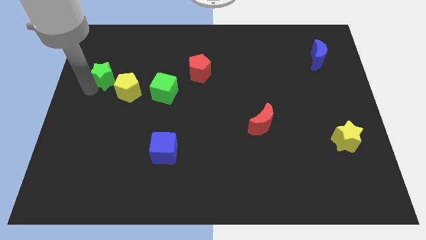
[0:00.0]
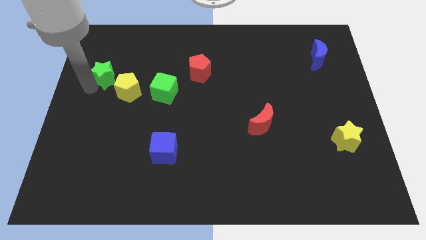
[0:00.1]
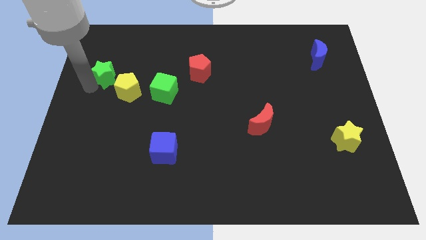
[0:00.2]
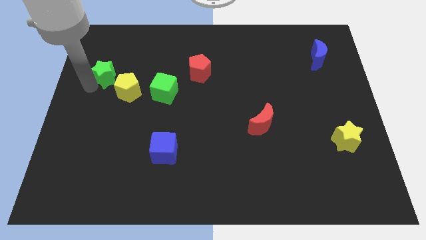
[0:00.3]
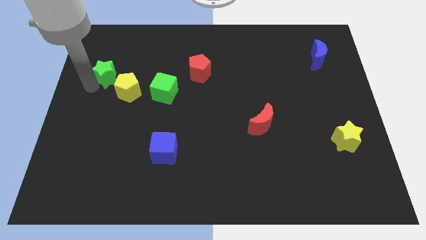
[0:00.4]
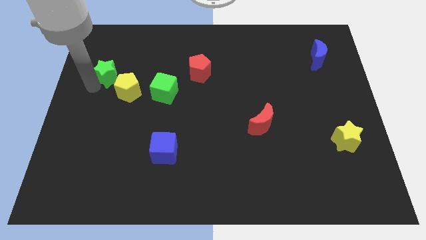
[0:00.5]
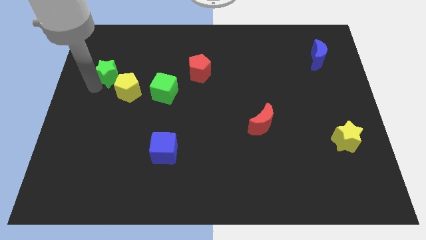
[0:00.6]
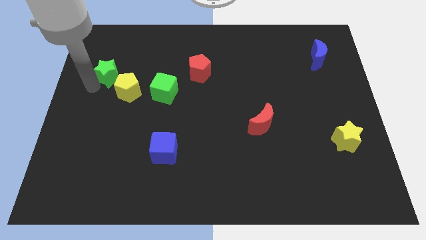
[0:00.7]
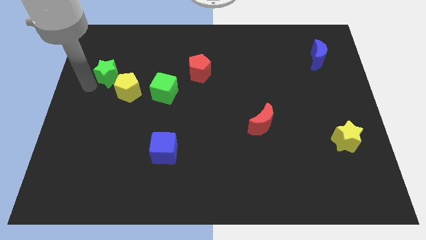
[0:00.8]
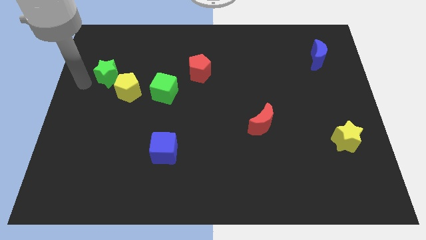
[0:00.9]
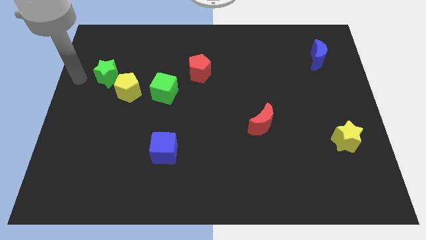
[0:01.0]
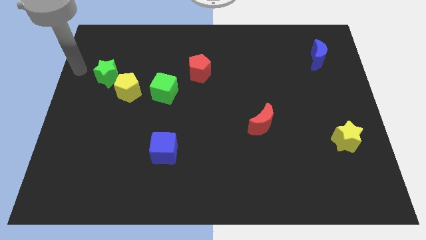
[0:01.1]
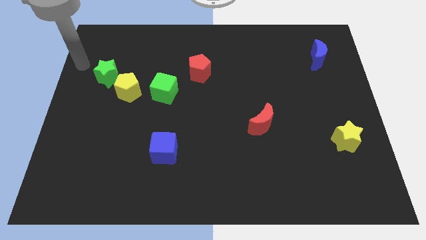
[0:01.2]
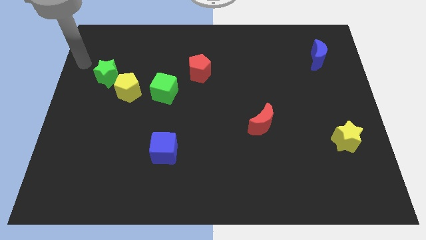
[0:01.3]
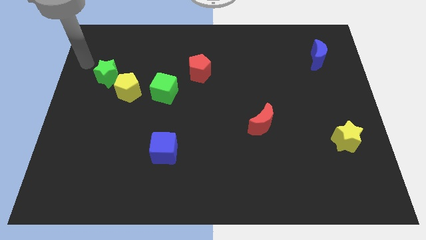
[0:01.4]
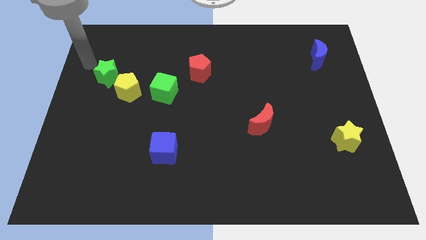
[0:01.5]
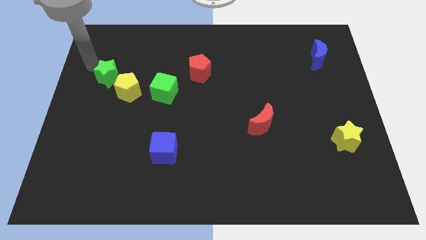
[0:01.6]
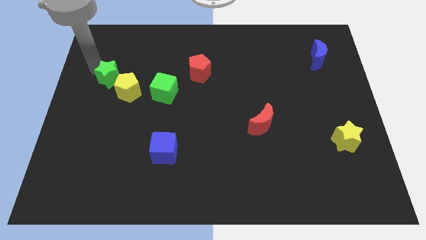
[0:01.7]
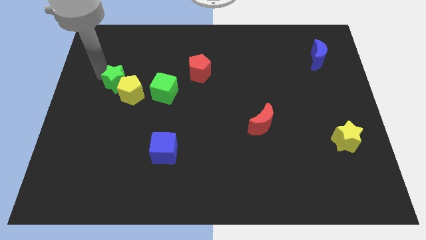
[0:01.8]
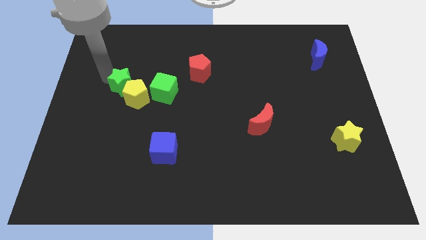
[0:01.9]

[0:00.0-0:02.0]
push the green star into the yellow pentagon

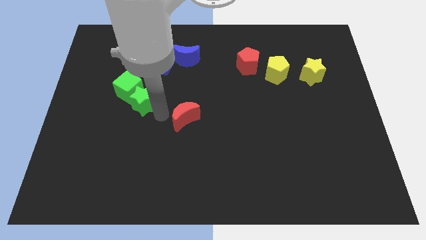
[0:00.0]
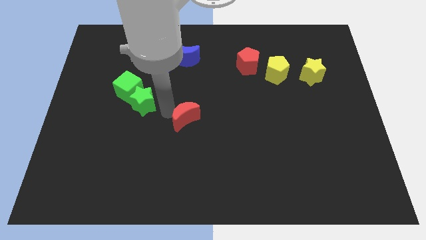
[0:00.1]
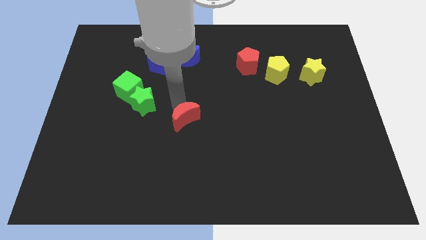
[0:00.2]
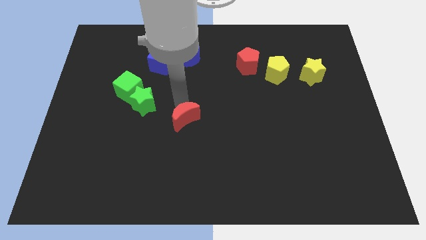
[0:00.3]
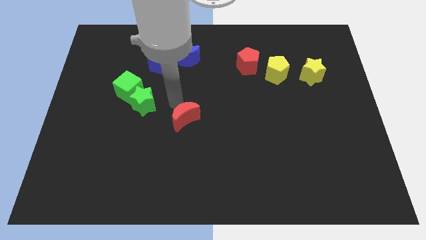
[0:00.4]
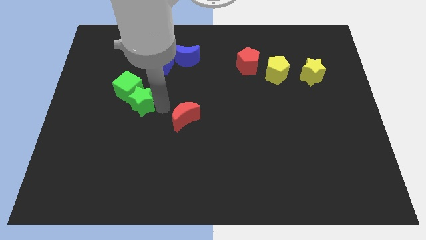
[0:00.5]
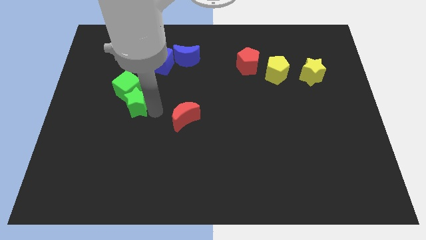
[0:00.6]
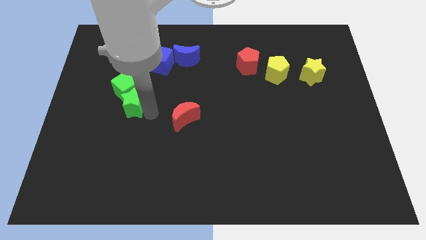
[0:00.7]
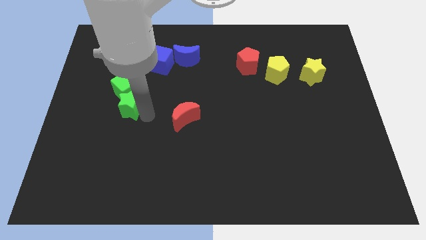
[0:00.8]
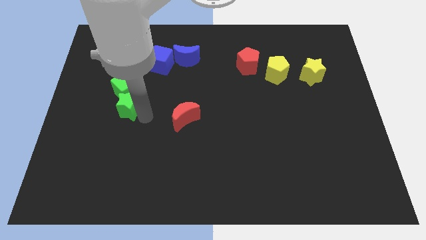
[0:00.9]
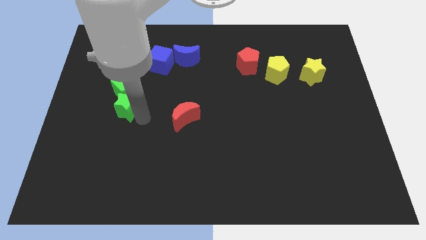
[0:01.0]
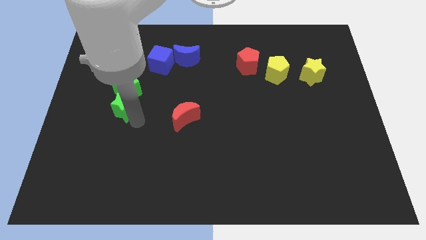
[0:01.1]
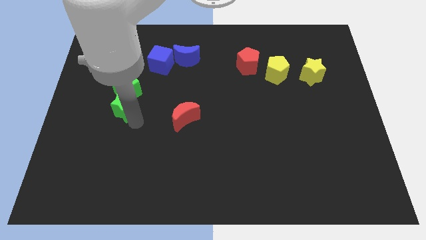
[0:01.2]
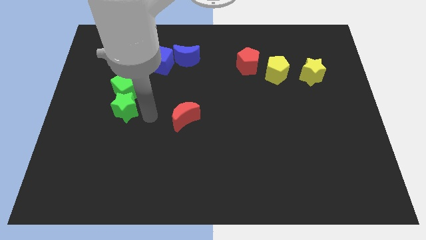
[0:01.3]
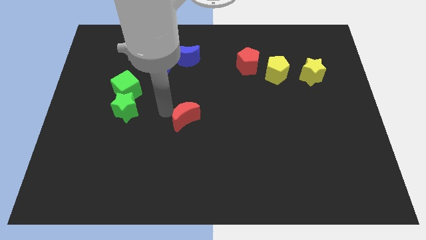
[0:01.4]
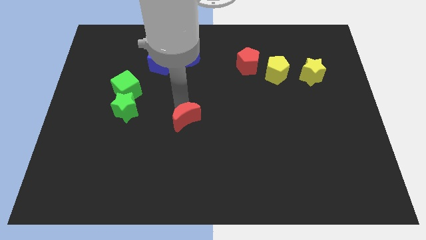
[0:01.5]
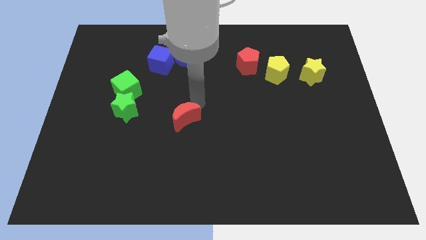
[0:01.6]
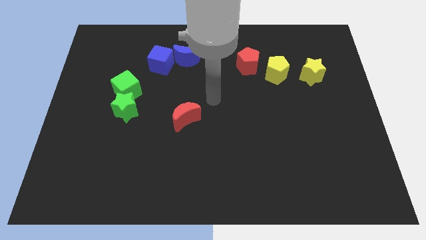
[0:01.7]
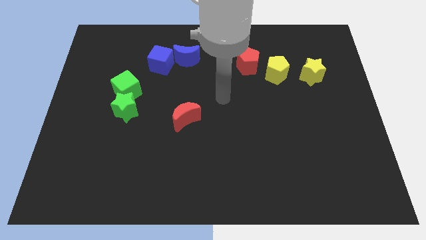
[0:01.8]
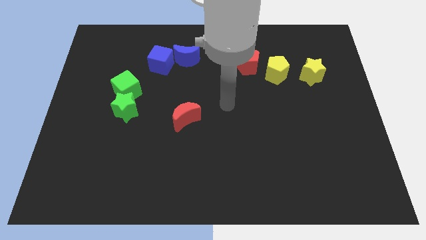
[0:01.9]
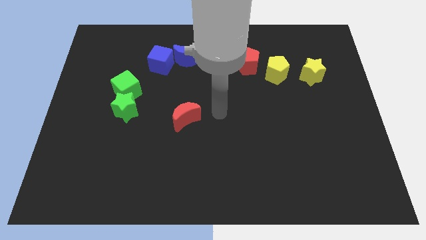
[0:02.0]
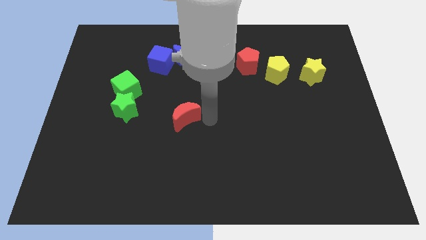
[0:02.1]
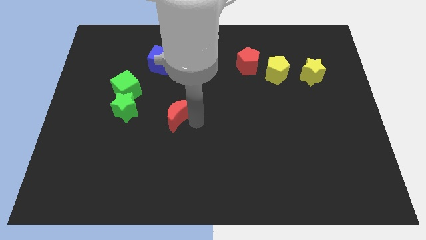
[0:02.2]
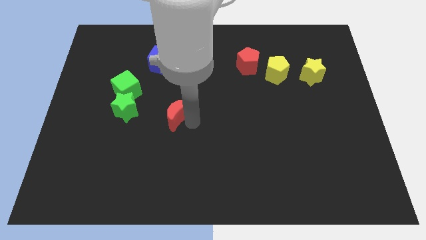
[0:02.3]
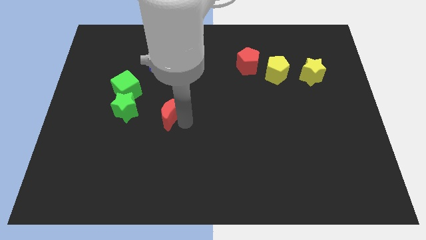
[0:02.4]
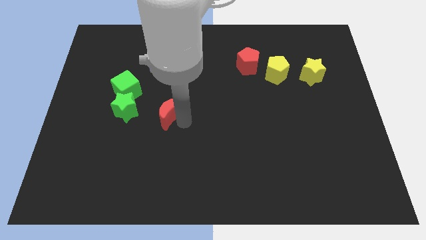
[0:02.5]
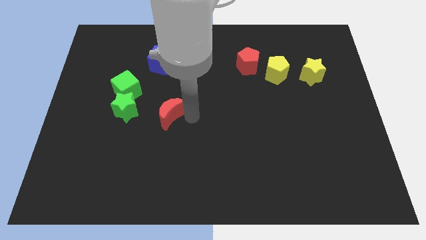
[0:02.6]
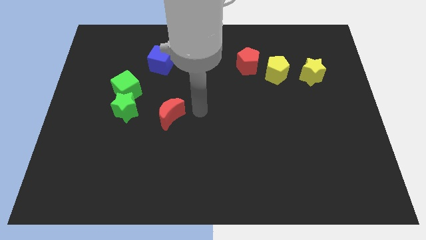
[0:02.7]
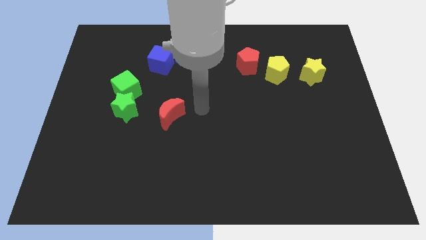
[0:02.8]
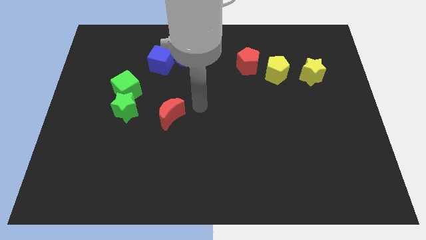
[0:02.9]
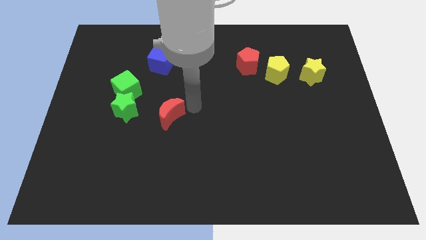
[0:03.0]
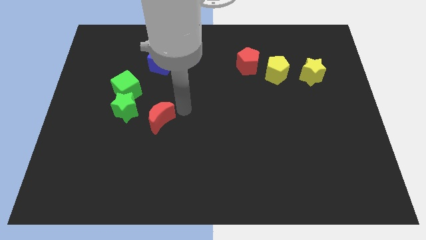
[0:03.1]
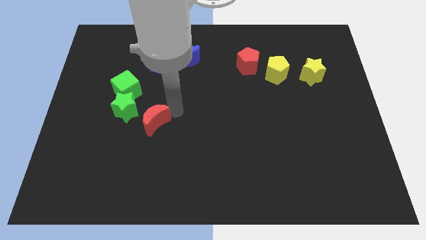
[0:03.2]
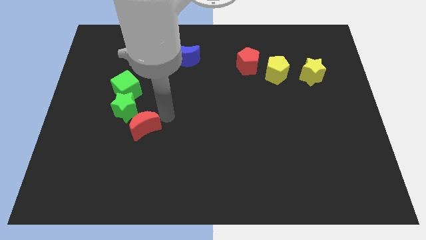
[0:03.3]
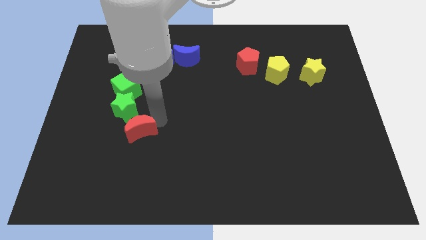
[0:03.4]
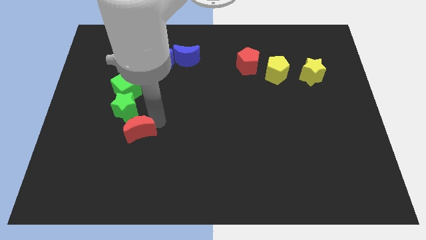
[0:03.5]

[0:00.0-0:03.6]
place the red moon to the bottom right of green star

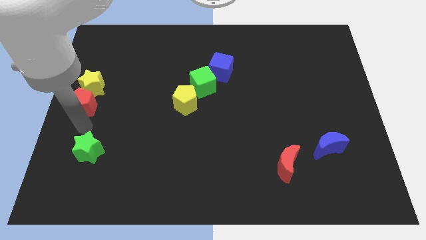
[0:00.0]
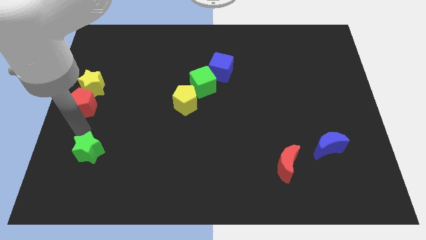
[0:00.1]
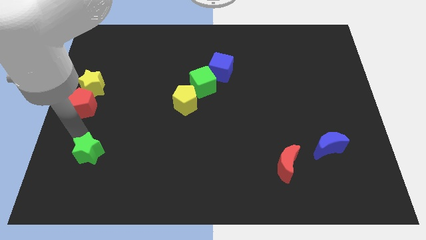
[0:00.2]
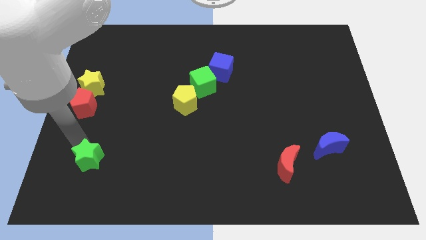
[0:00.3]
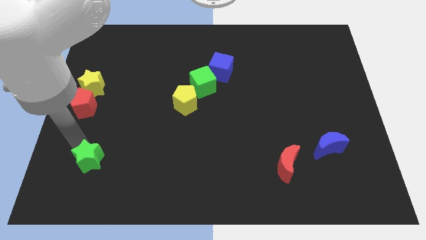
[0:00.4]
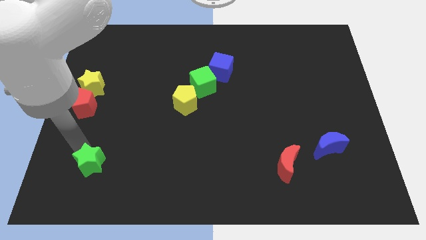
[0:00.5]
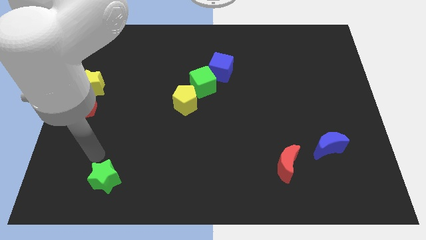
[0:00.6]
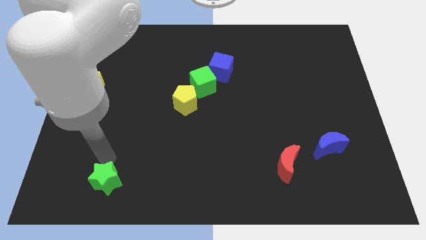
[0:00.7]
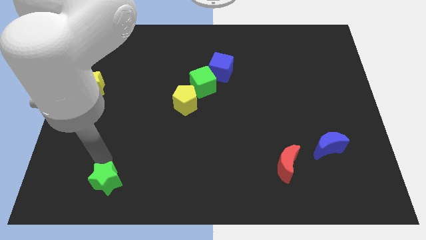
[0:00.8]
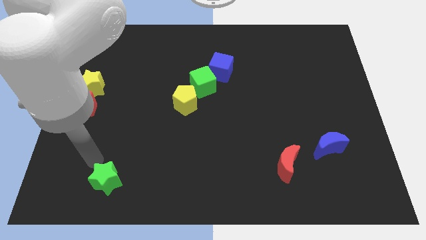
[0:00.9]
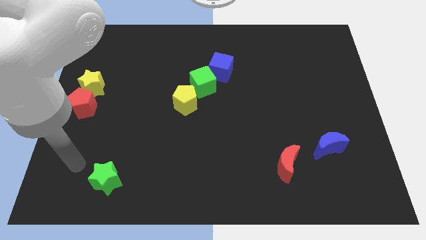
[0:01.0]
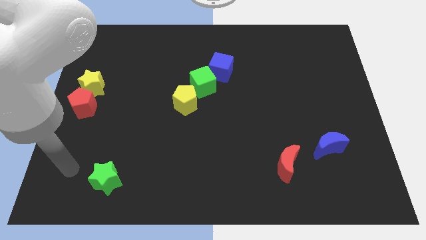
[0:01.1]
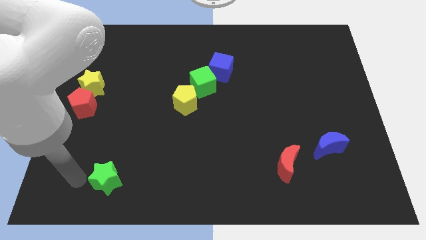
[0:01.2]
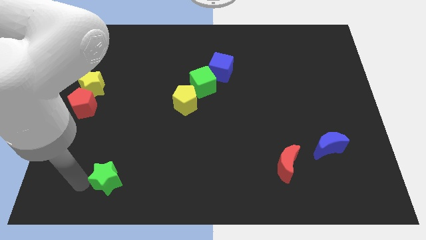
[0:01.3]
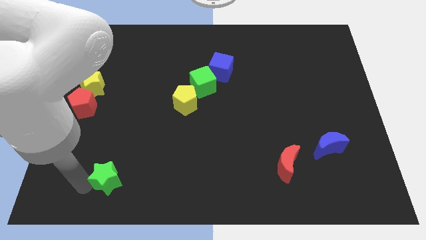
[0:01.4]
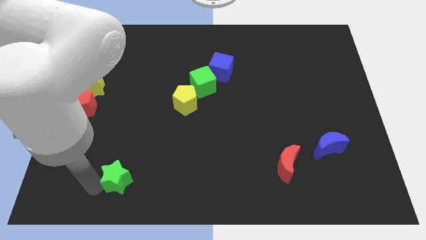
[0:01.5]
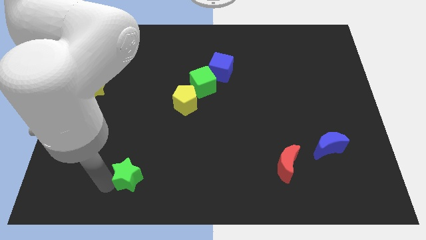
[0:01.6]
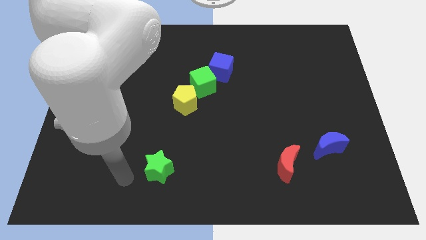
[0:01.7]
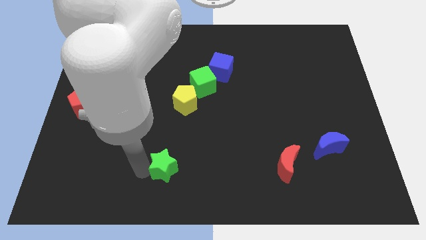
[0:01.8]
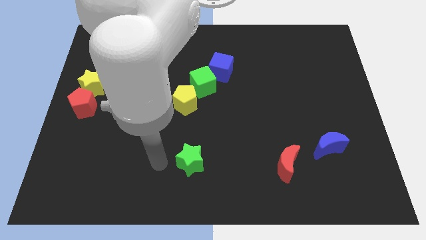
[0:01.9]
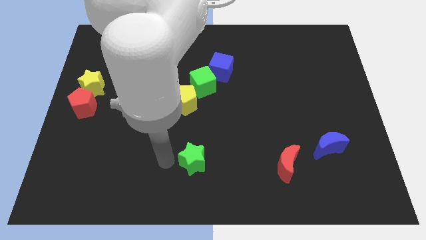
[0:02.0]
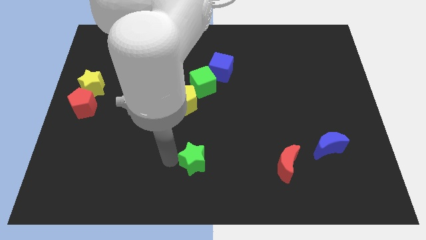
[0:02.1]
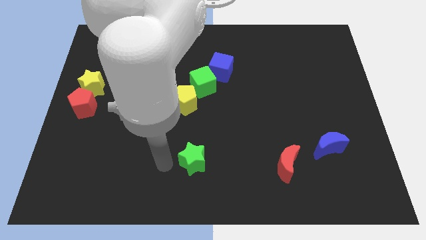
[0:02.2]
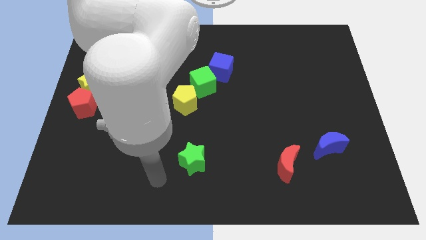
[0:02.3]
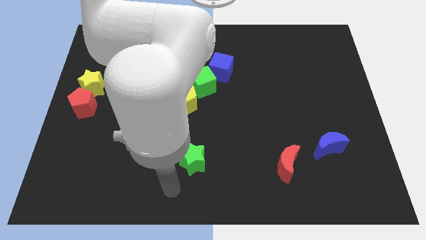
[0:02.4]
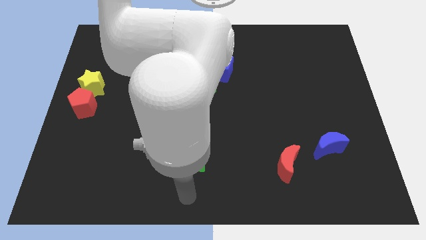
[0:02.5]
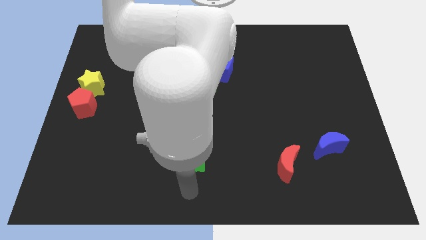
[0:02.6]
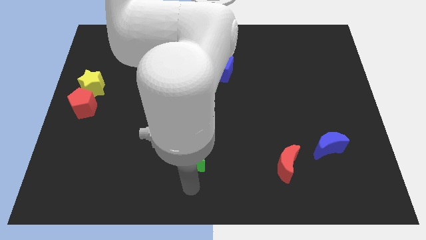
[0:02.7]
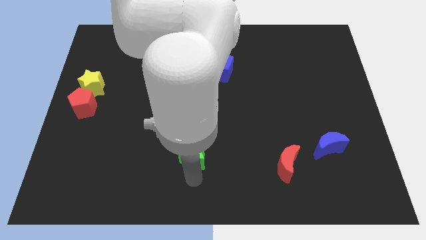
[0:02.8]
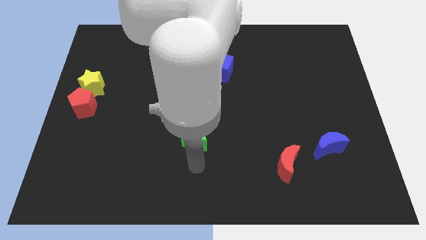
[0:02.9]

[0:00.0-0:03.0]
place green star at bottom center
